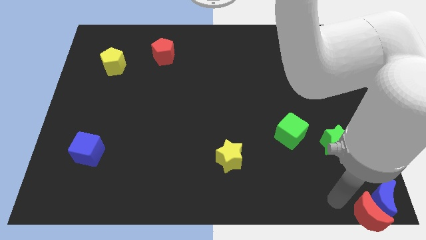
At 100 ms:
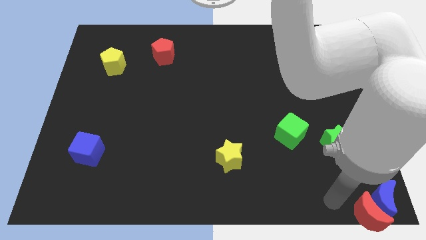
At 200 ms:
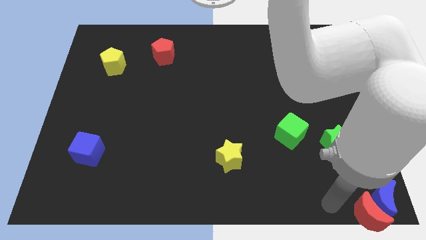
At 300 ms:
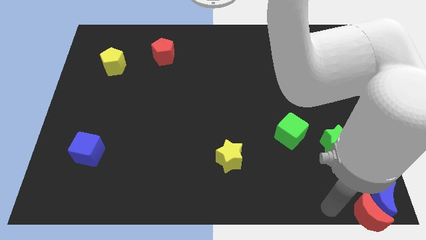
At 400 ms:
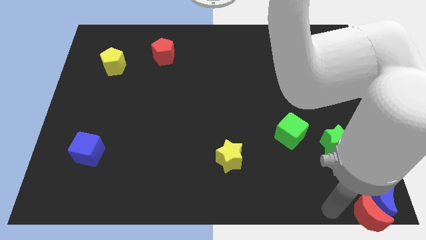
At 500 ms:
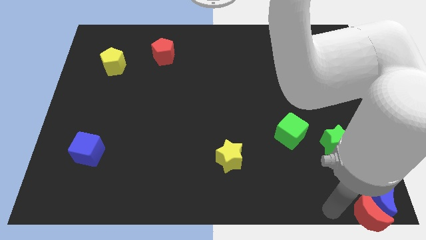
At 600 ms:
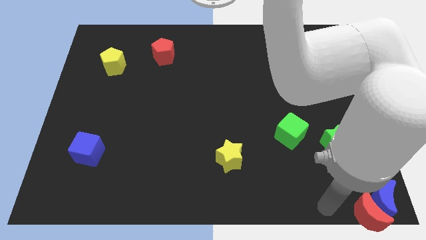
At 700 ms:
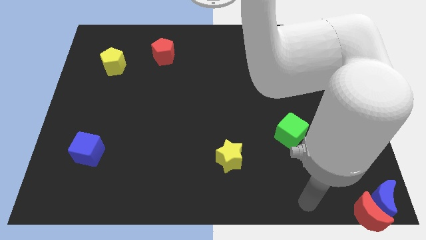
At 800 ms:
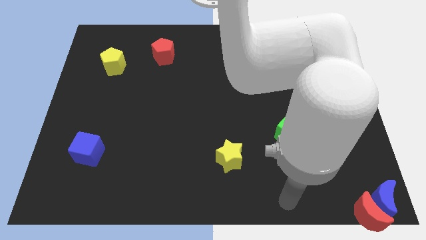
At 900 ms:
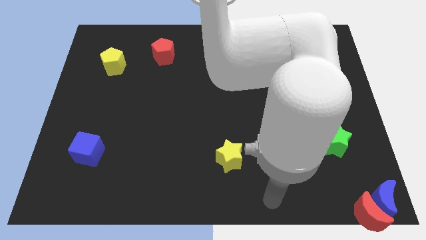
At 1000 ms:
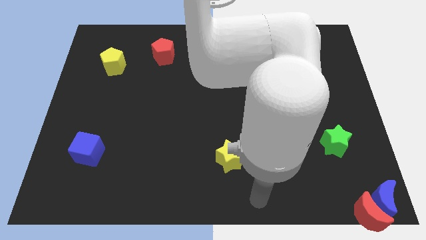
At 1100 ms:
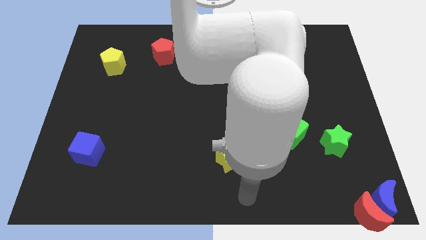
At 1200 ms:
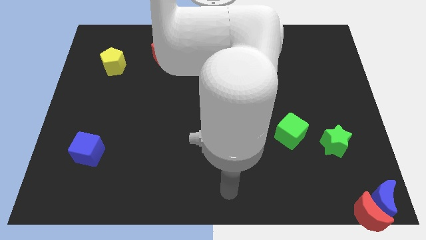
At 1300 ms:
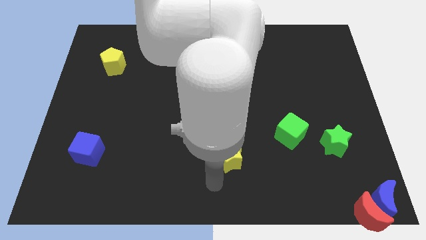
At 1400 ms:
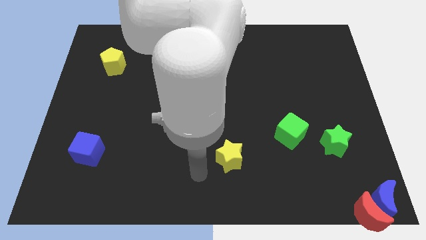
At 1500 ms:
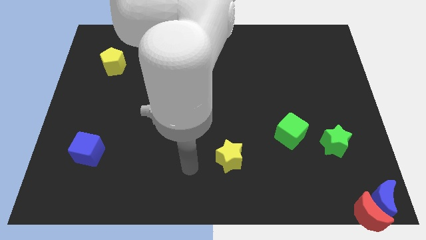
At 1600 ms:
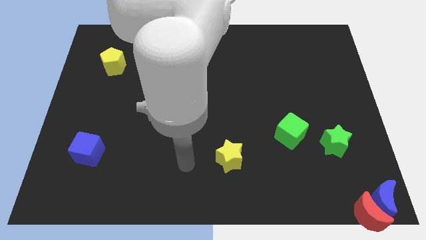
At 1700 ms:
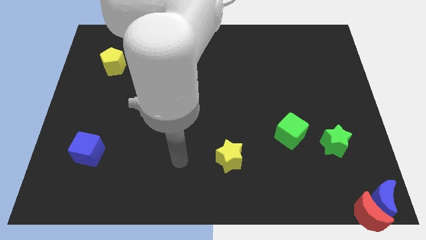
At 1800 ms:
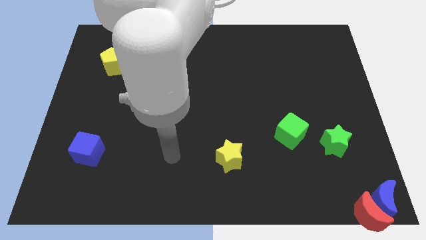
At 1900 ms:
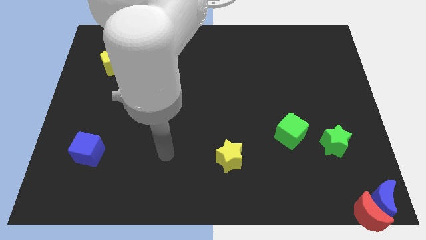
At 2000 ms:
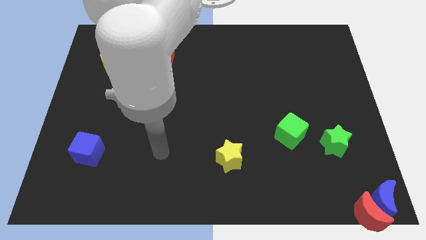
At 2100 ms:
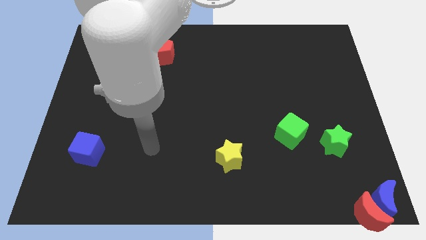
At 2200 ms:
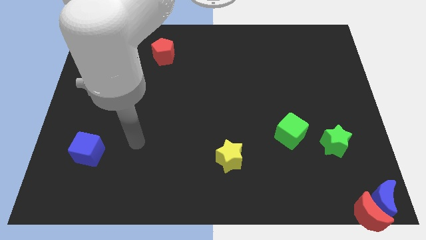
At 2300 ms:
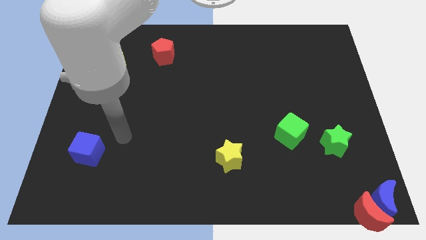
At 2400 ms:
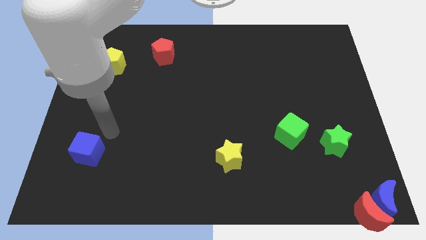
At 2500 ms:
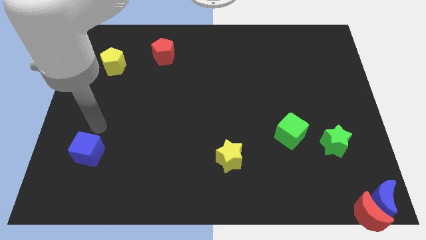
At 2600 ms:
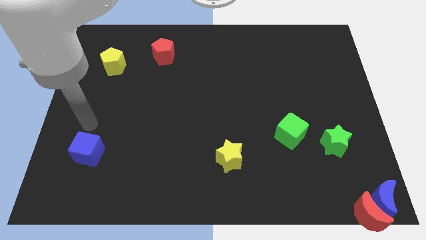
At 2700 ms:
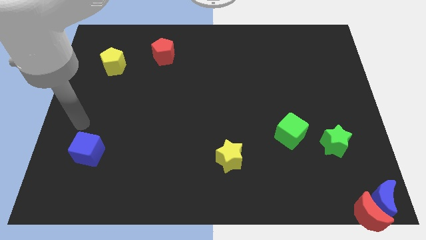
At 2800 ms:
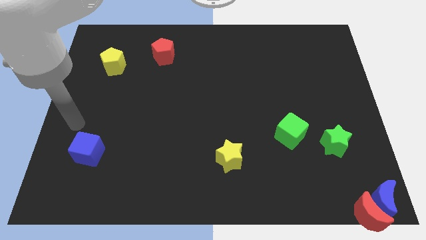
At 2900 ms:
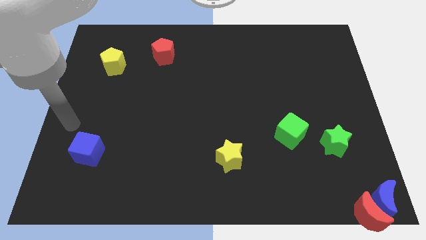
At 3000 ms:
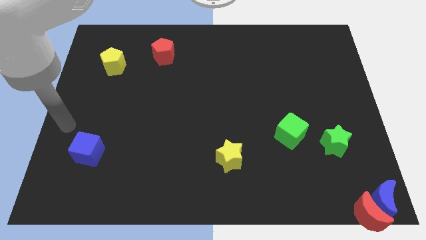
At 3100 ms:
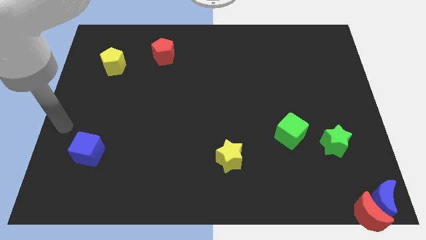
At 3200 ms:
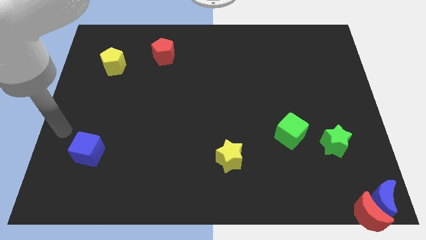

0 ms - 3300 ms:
move the arm away from the red moon

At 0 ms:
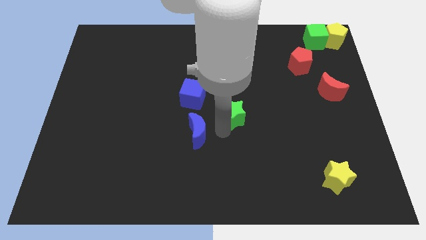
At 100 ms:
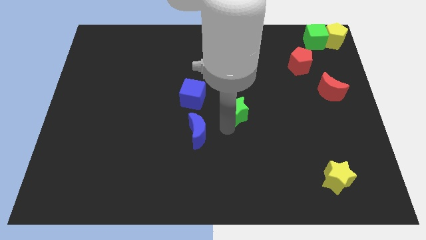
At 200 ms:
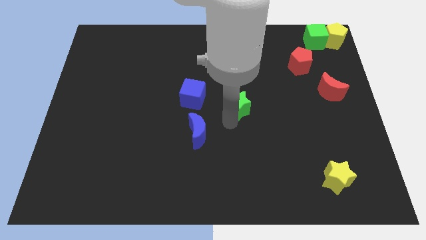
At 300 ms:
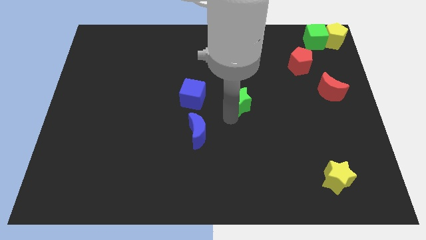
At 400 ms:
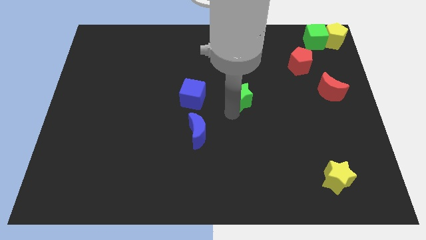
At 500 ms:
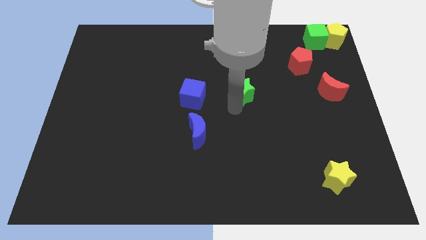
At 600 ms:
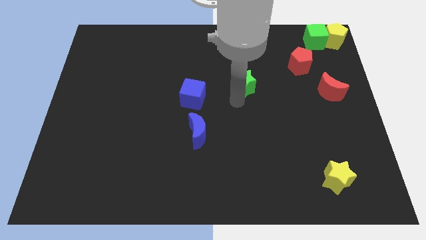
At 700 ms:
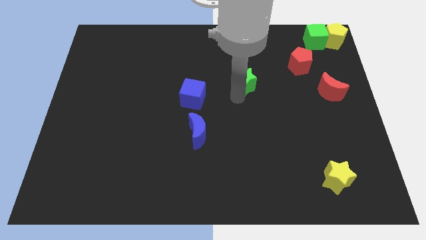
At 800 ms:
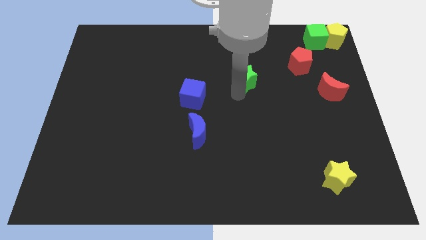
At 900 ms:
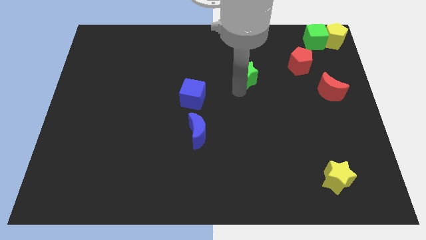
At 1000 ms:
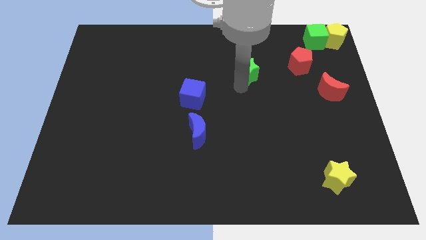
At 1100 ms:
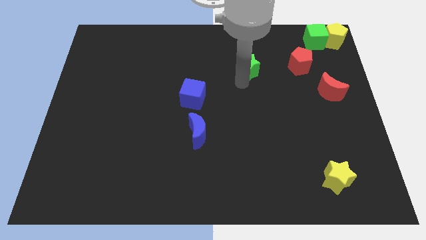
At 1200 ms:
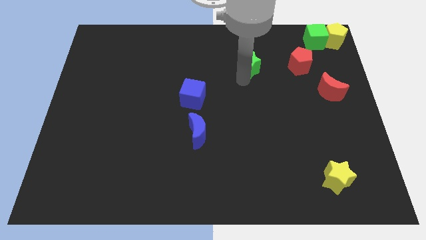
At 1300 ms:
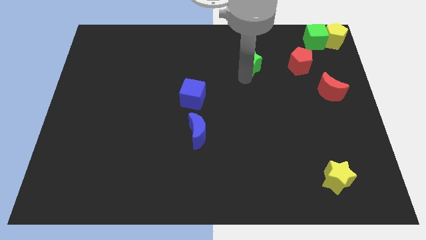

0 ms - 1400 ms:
move the green star to the top of the board

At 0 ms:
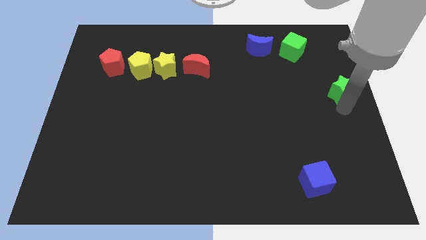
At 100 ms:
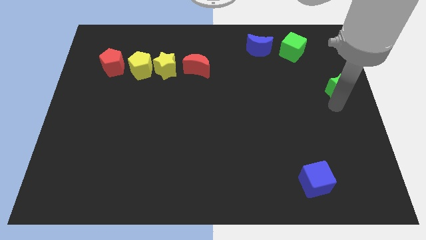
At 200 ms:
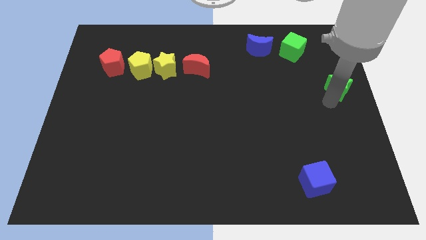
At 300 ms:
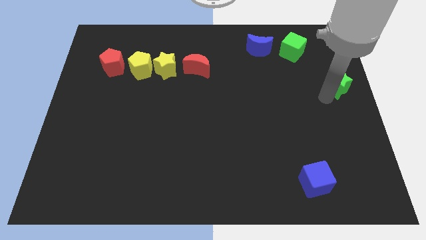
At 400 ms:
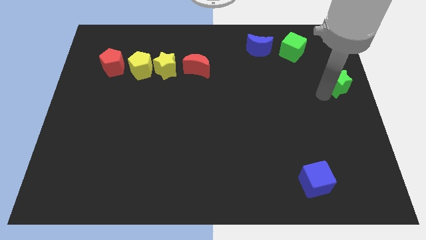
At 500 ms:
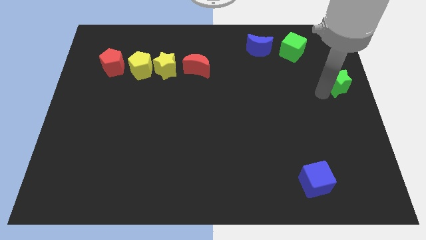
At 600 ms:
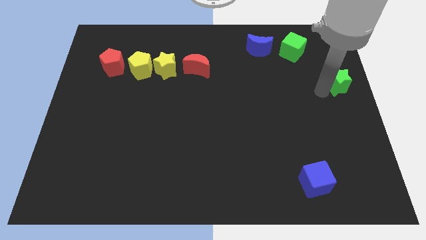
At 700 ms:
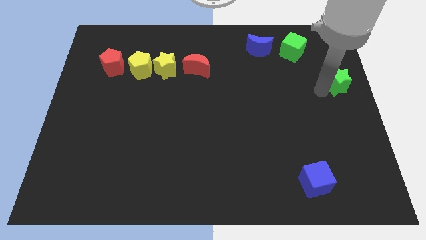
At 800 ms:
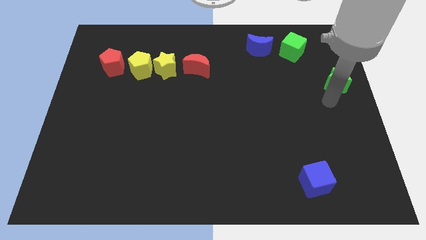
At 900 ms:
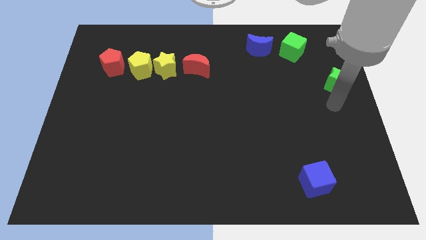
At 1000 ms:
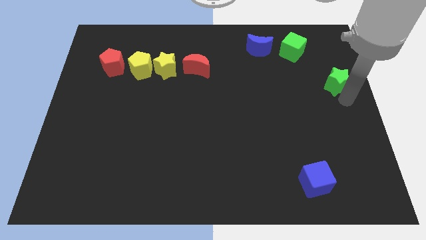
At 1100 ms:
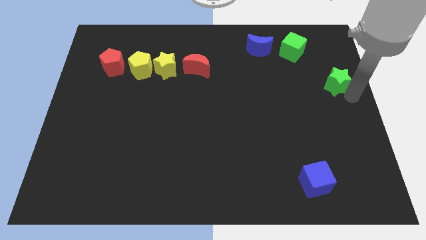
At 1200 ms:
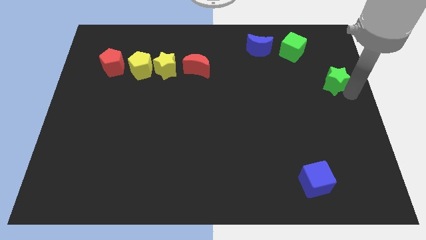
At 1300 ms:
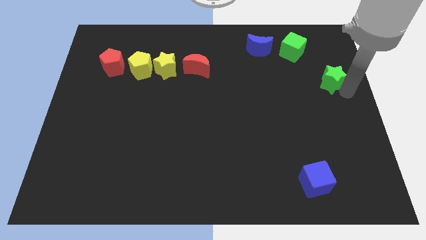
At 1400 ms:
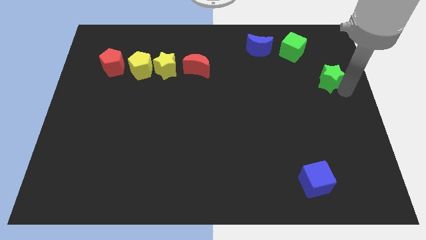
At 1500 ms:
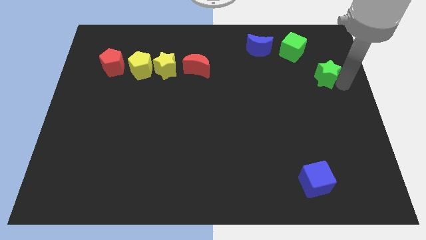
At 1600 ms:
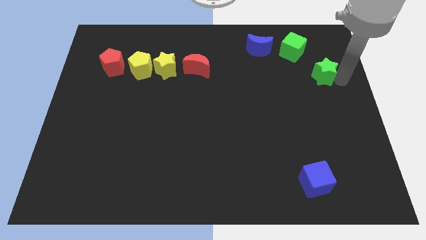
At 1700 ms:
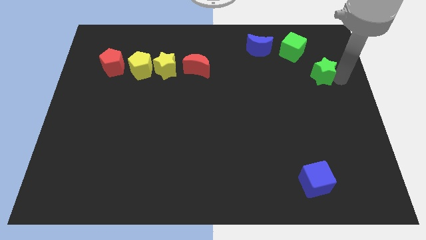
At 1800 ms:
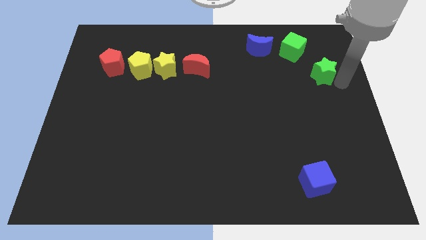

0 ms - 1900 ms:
push the green star towards green cube

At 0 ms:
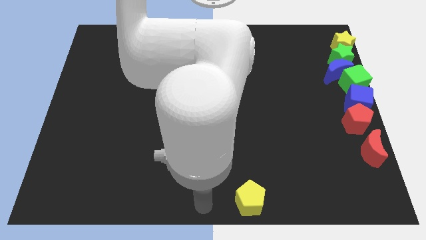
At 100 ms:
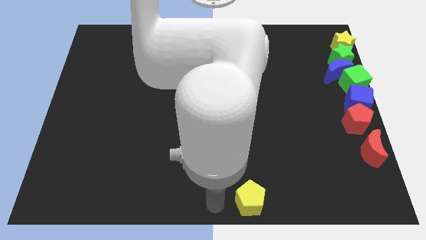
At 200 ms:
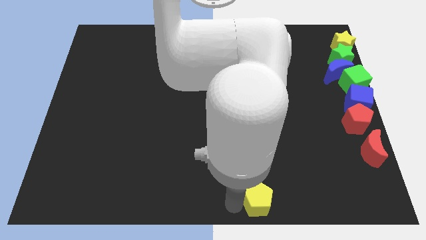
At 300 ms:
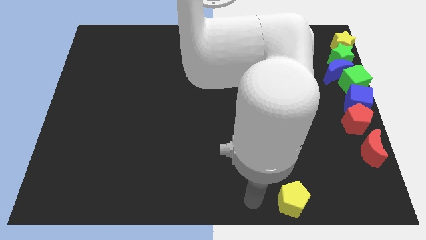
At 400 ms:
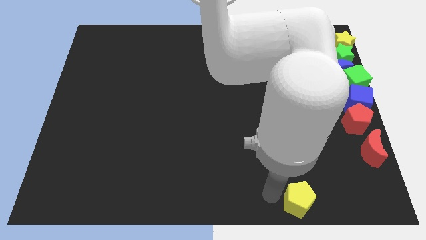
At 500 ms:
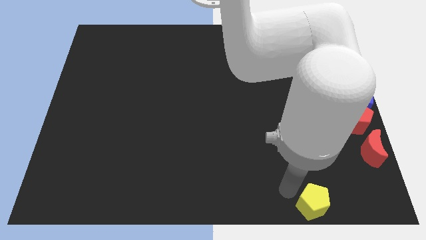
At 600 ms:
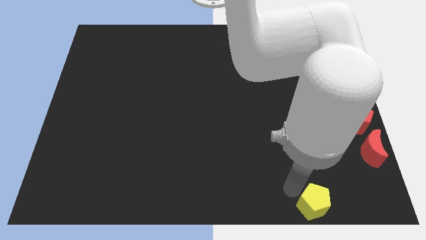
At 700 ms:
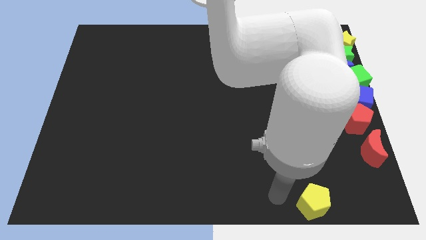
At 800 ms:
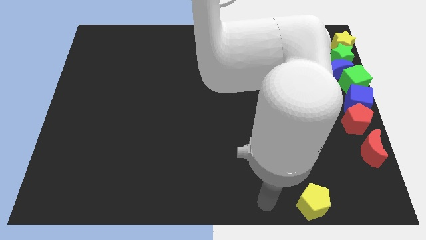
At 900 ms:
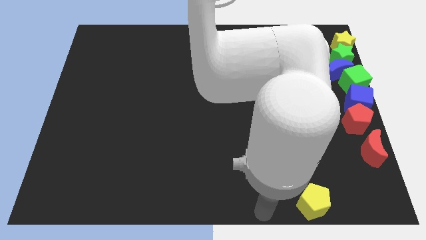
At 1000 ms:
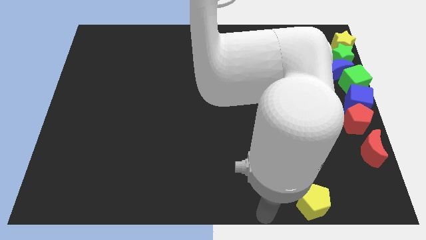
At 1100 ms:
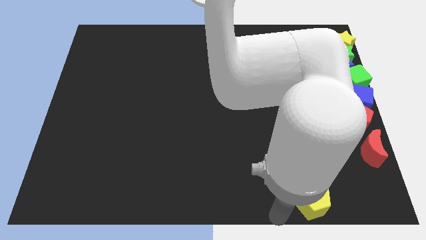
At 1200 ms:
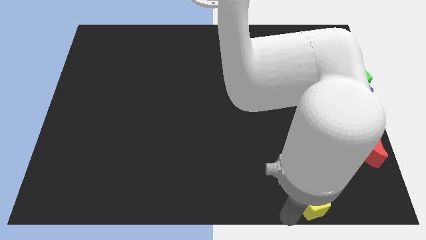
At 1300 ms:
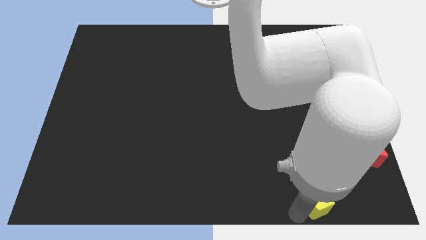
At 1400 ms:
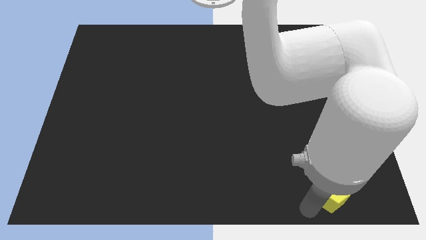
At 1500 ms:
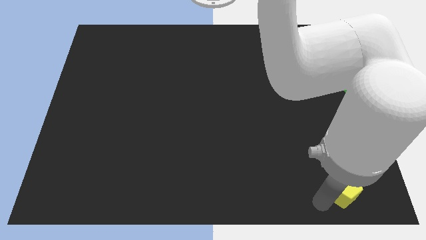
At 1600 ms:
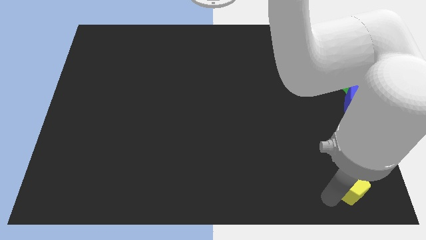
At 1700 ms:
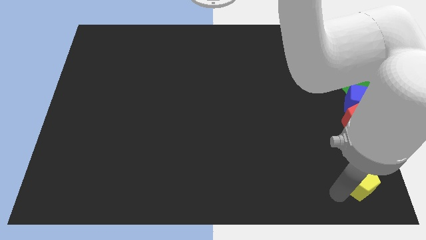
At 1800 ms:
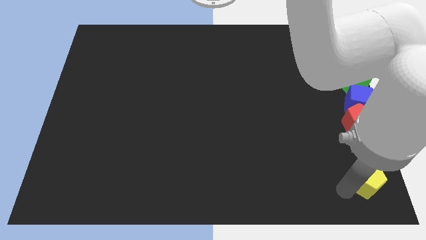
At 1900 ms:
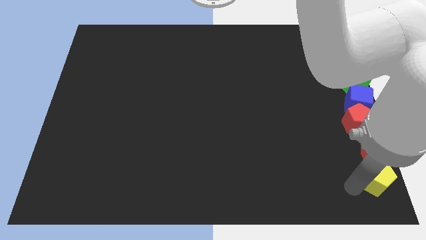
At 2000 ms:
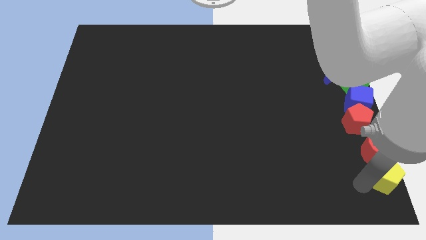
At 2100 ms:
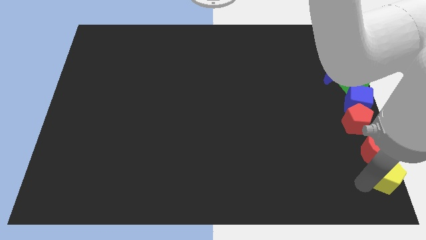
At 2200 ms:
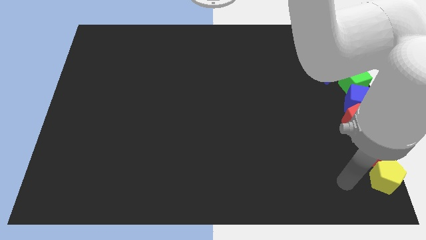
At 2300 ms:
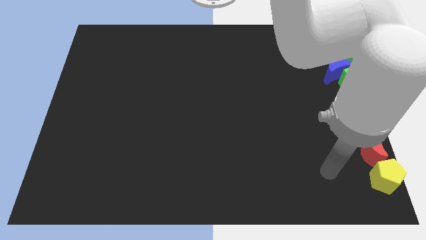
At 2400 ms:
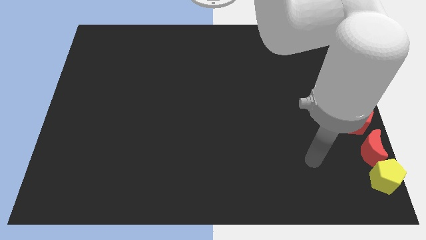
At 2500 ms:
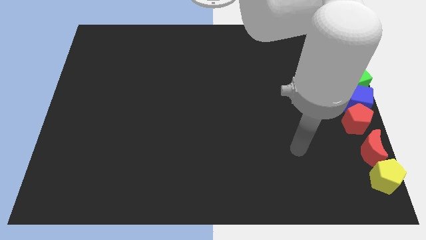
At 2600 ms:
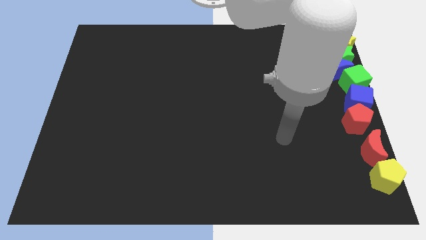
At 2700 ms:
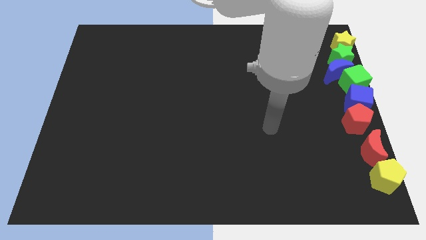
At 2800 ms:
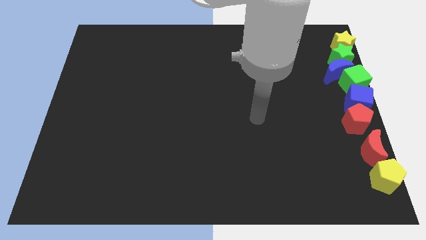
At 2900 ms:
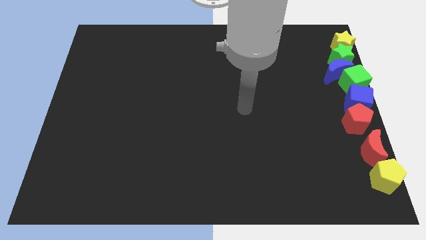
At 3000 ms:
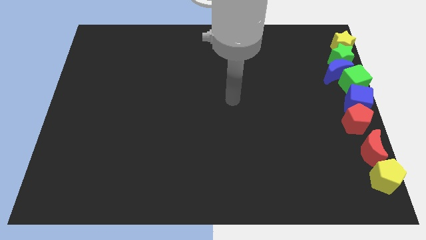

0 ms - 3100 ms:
put your arm on the center right of the board
